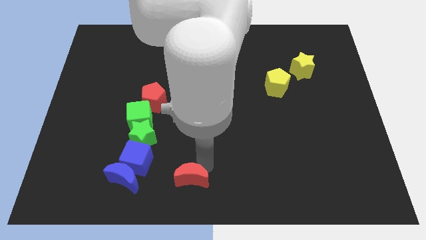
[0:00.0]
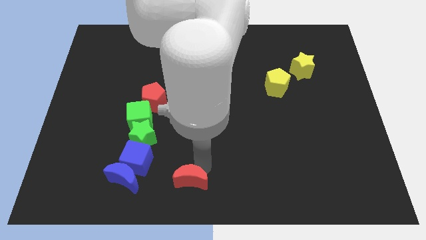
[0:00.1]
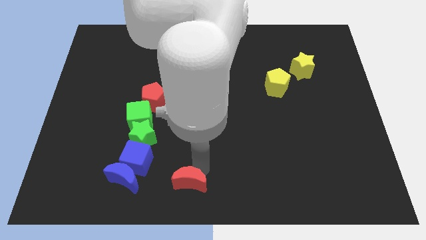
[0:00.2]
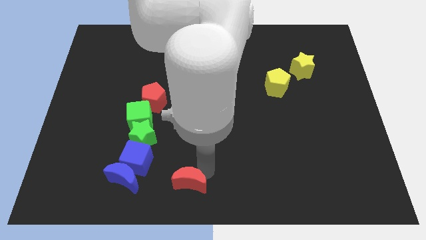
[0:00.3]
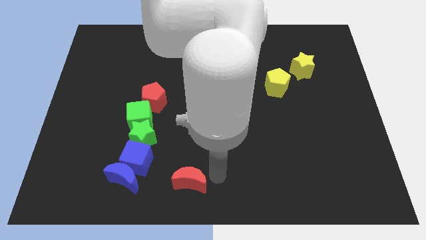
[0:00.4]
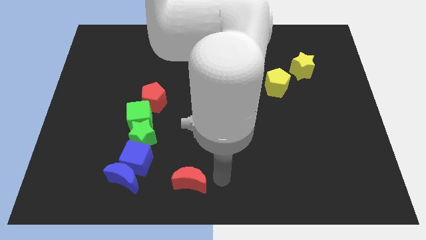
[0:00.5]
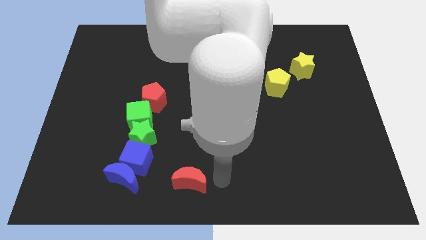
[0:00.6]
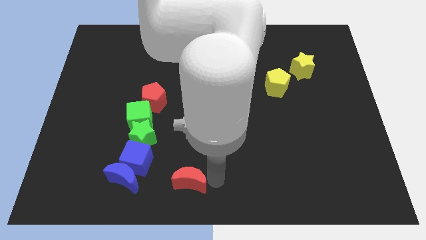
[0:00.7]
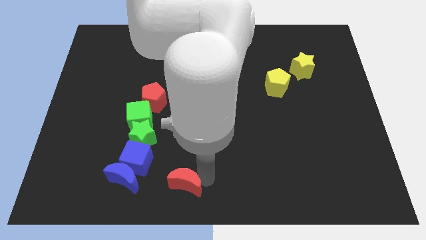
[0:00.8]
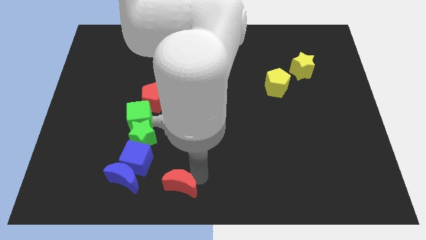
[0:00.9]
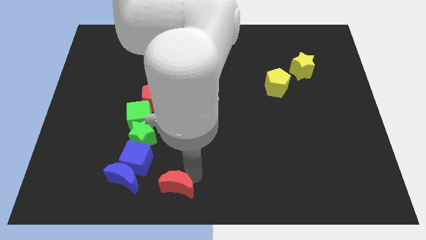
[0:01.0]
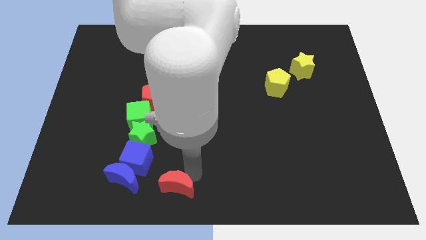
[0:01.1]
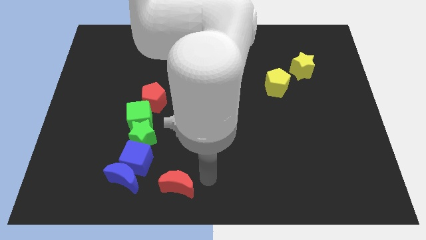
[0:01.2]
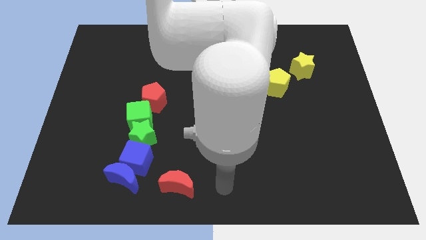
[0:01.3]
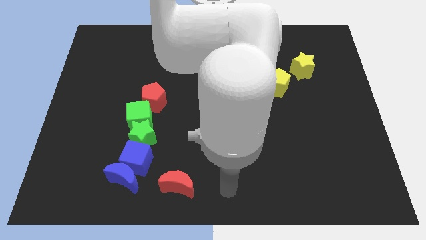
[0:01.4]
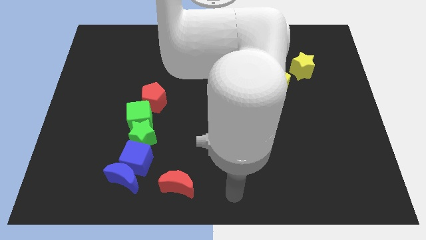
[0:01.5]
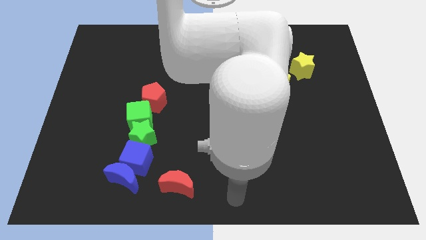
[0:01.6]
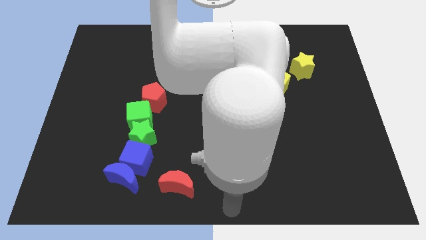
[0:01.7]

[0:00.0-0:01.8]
move the red moon slightly to the left

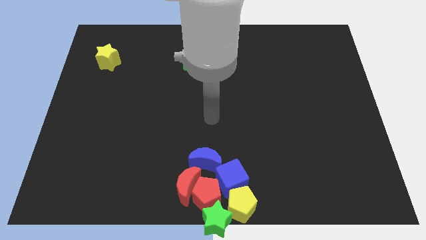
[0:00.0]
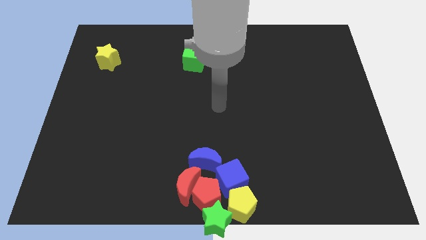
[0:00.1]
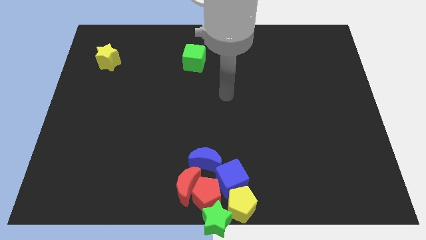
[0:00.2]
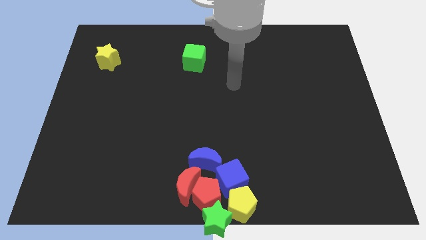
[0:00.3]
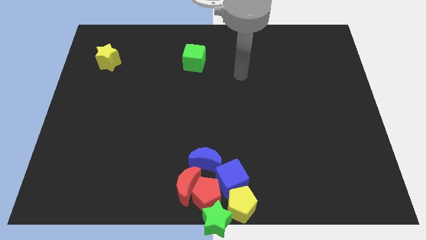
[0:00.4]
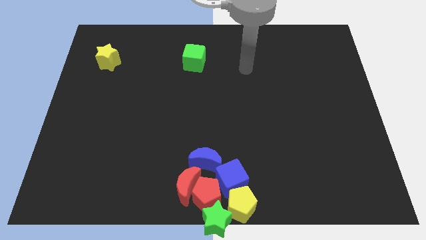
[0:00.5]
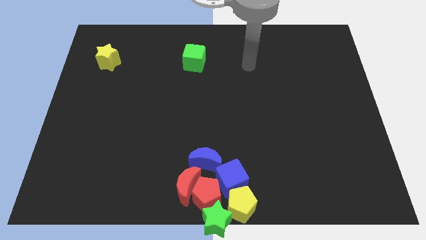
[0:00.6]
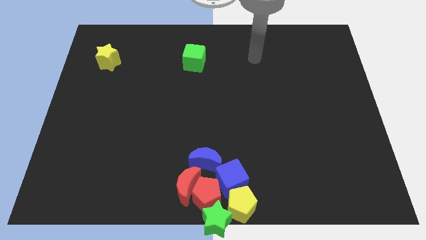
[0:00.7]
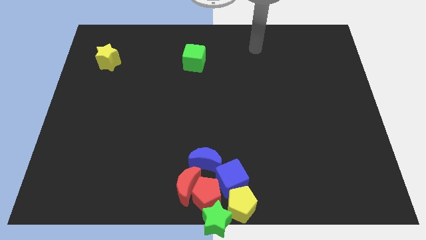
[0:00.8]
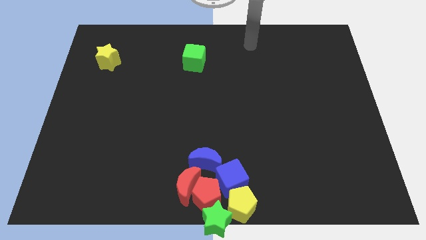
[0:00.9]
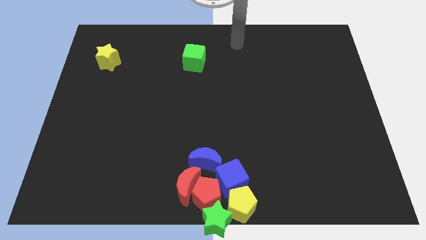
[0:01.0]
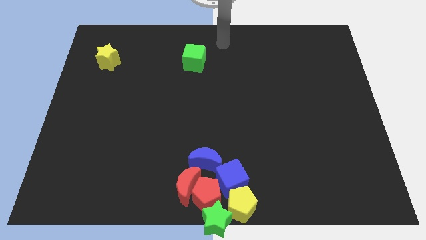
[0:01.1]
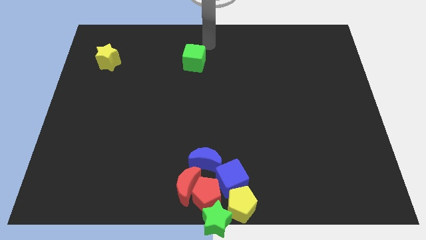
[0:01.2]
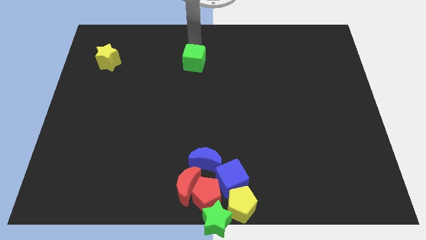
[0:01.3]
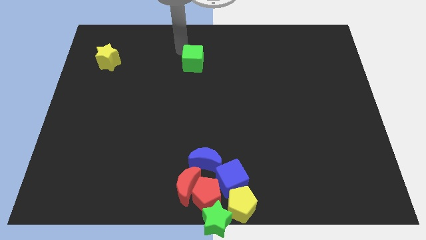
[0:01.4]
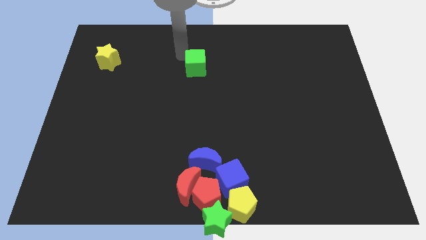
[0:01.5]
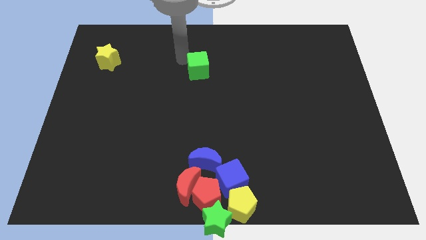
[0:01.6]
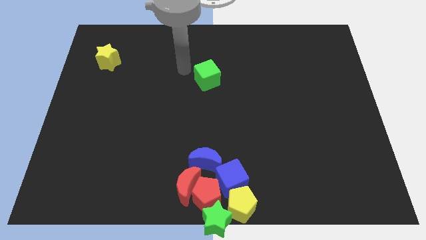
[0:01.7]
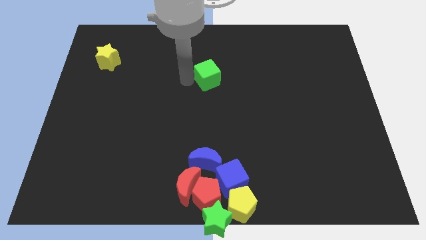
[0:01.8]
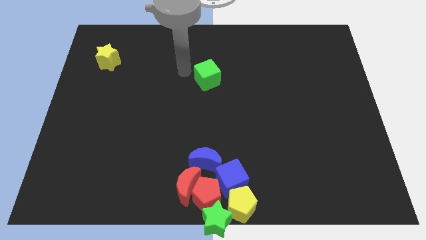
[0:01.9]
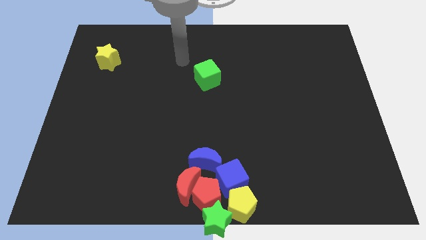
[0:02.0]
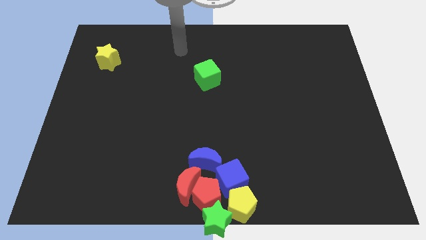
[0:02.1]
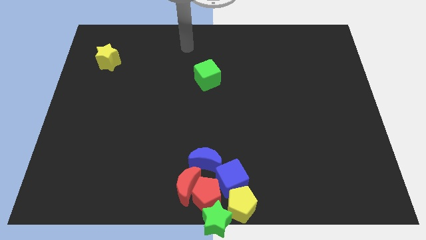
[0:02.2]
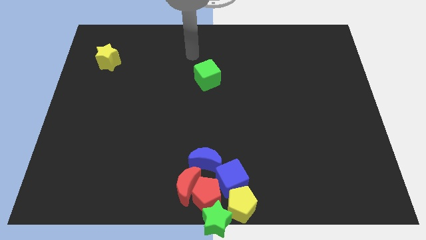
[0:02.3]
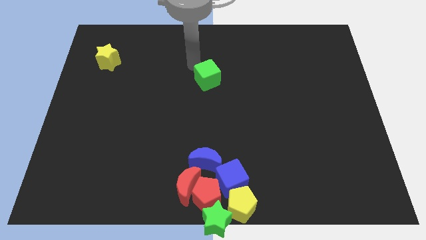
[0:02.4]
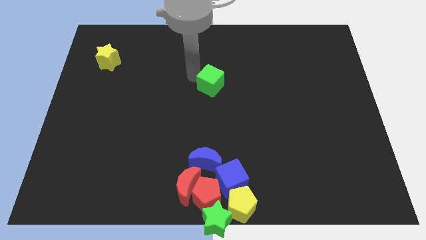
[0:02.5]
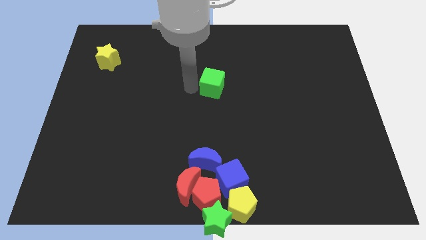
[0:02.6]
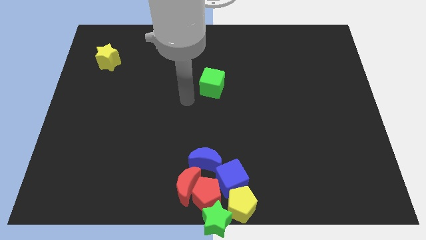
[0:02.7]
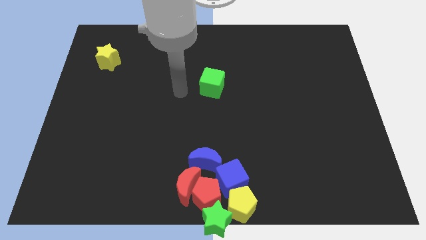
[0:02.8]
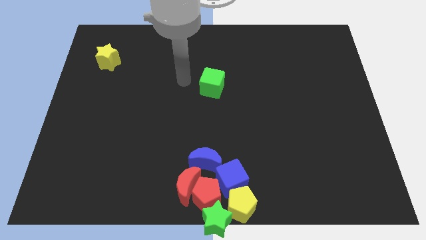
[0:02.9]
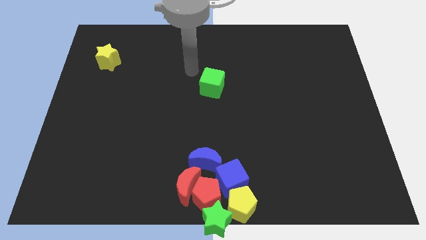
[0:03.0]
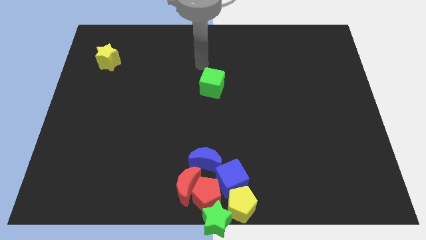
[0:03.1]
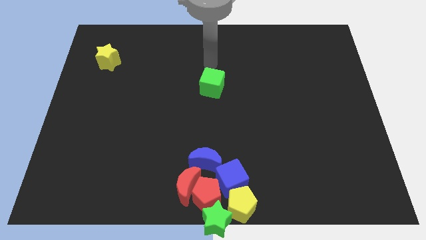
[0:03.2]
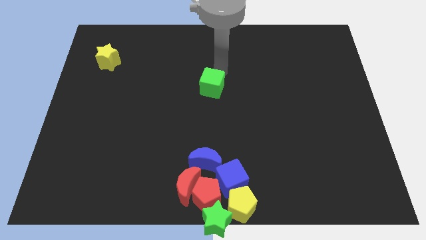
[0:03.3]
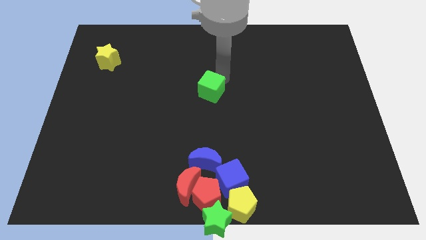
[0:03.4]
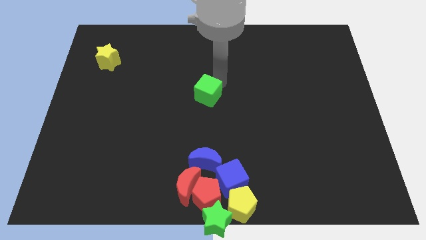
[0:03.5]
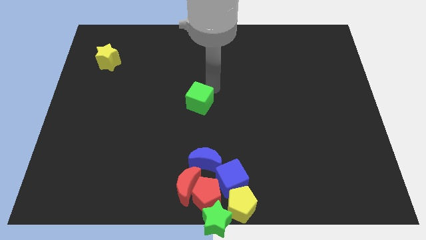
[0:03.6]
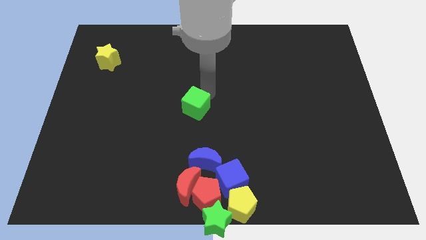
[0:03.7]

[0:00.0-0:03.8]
move the green cube to the center of the board

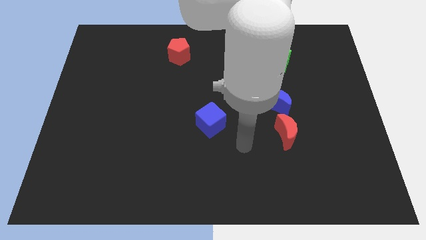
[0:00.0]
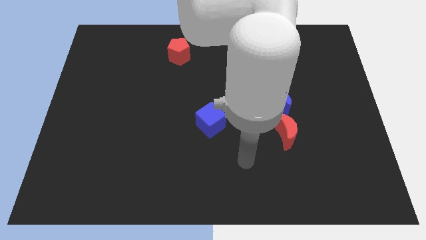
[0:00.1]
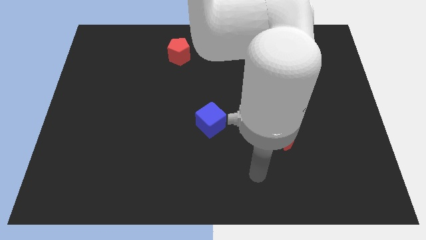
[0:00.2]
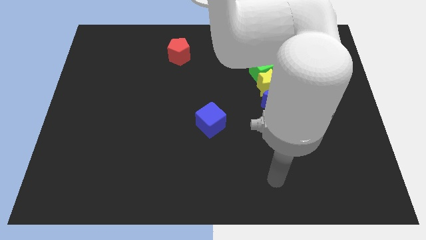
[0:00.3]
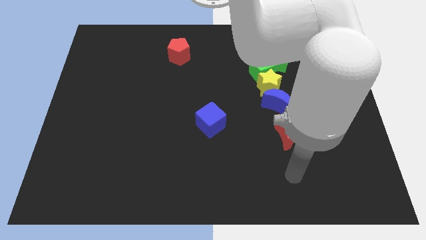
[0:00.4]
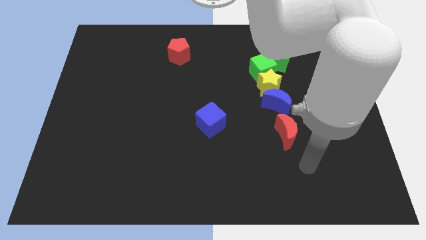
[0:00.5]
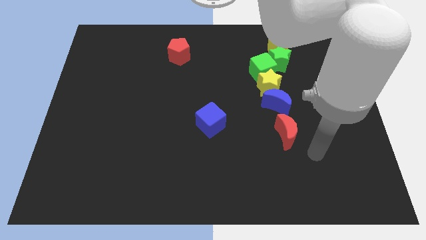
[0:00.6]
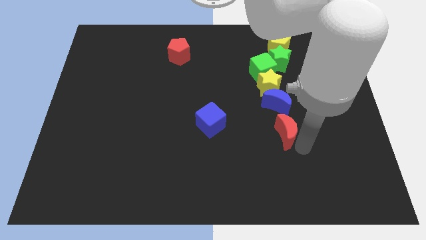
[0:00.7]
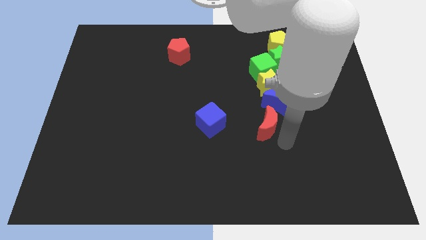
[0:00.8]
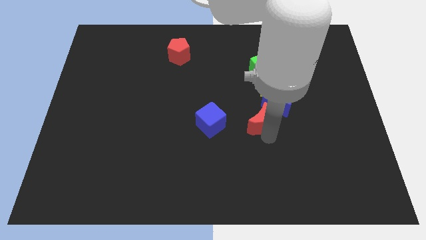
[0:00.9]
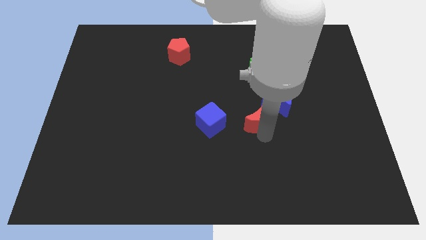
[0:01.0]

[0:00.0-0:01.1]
move red moon towards blue cube

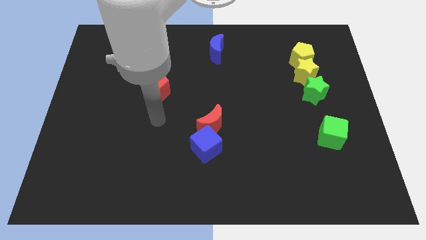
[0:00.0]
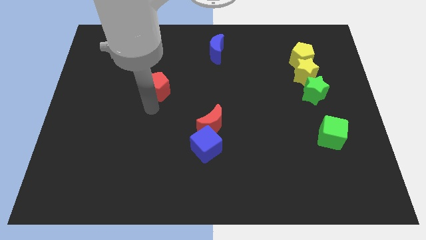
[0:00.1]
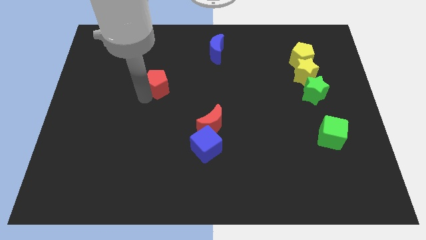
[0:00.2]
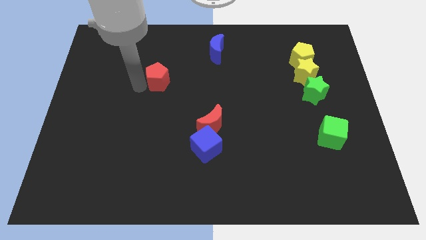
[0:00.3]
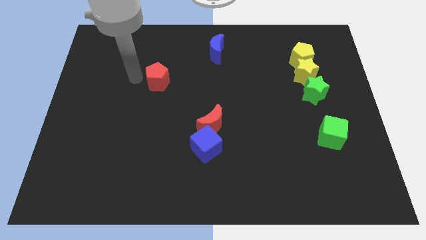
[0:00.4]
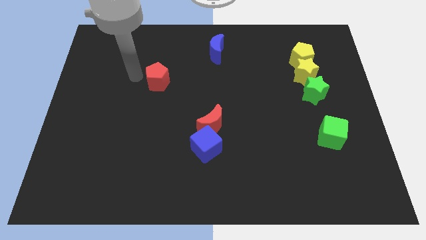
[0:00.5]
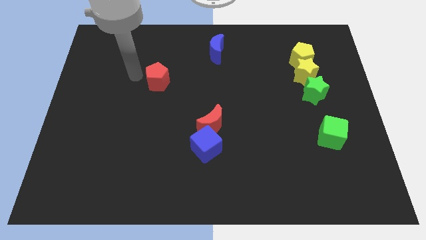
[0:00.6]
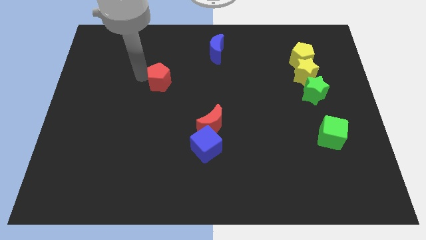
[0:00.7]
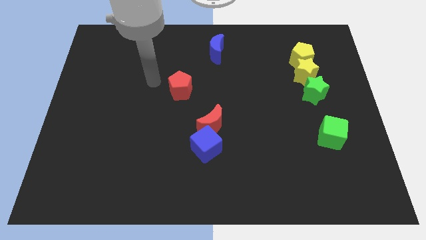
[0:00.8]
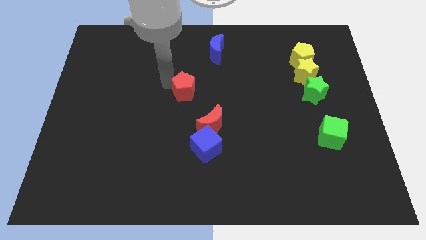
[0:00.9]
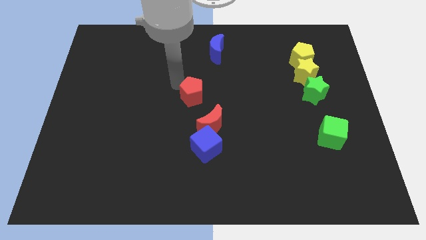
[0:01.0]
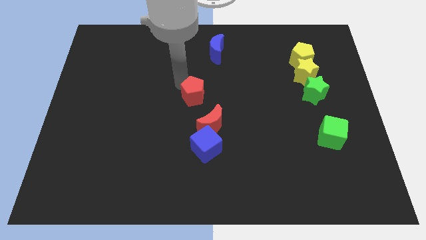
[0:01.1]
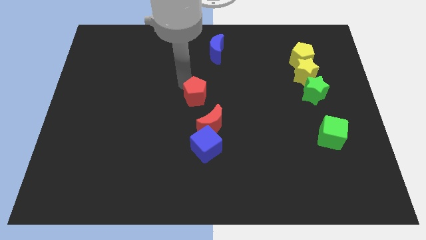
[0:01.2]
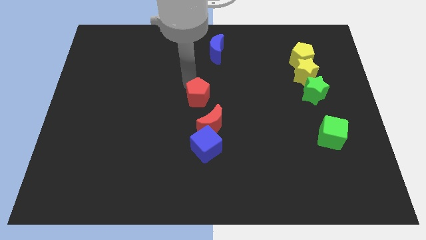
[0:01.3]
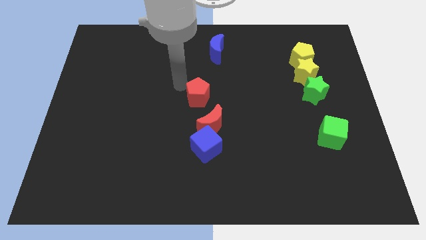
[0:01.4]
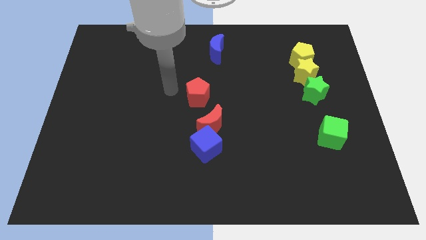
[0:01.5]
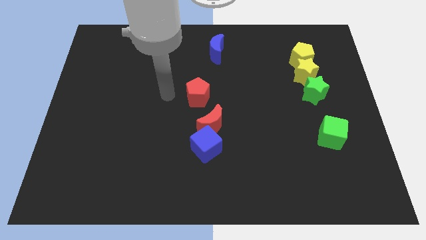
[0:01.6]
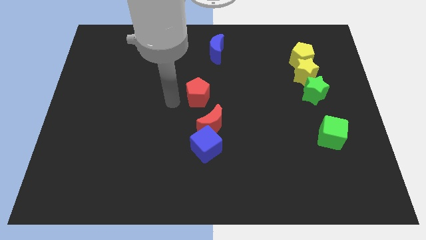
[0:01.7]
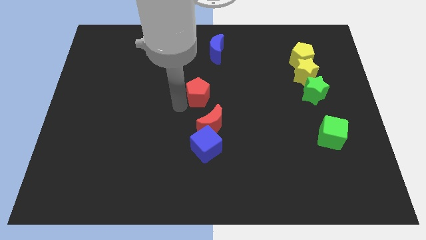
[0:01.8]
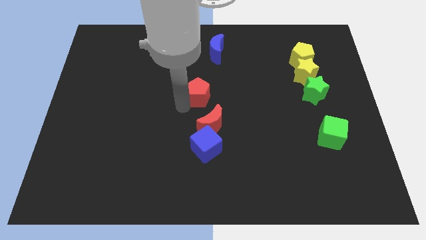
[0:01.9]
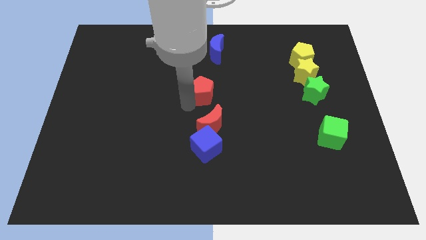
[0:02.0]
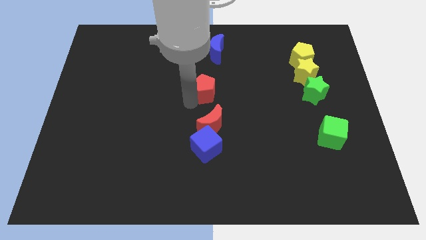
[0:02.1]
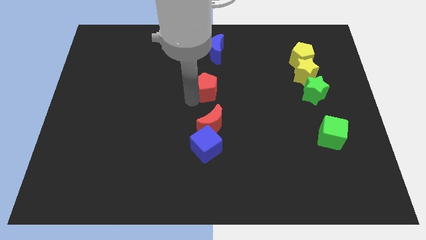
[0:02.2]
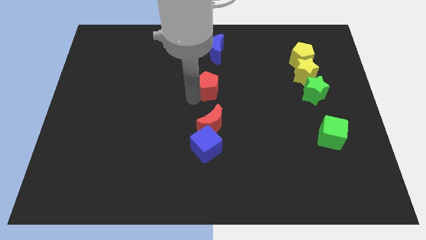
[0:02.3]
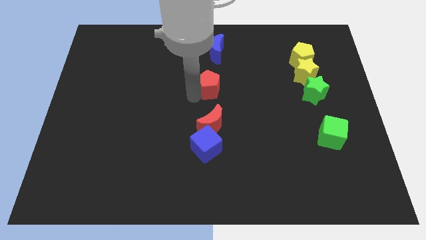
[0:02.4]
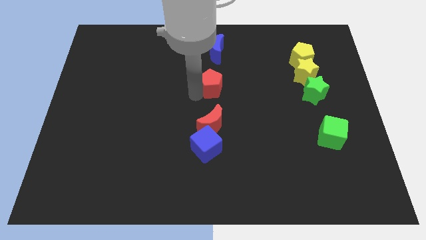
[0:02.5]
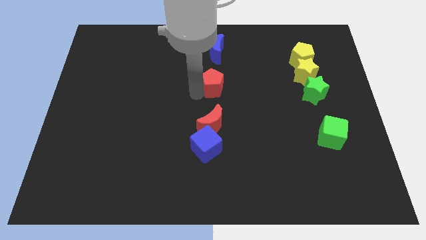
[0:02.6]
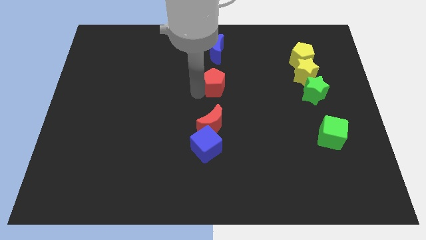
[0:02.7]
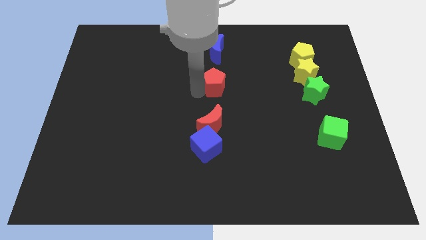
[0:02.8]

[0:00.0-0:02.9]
place the red pentagon in between the blue moon and red moon
